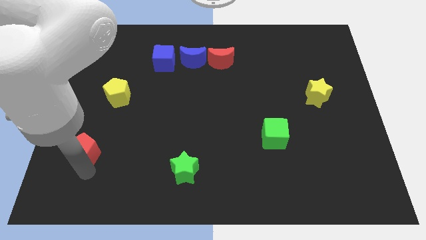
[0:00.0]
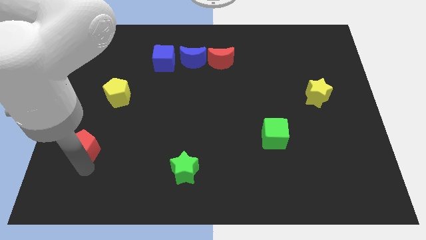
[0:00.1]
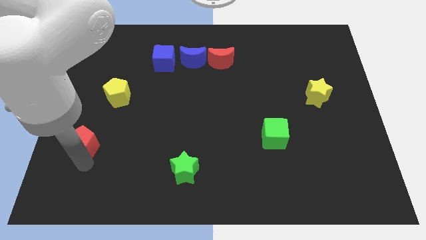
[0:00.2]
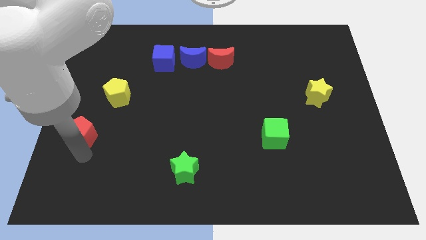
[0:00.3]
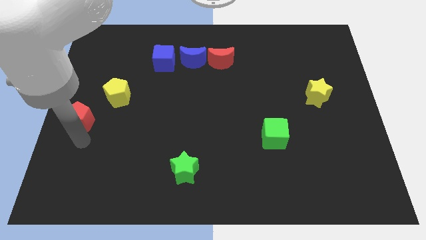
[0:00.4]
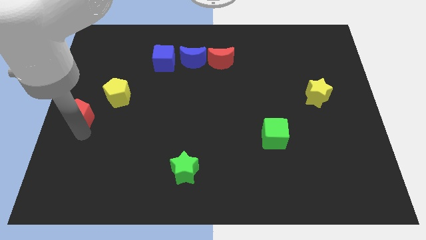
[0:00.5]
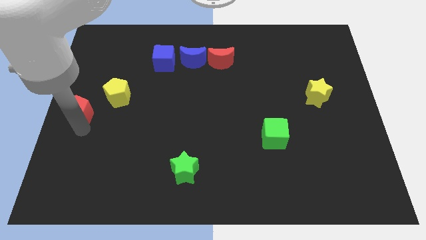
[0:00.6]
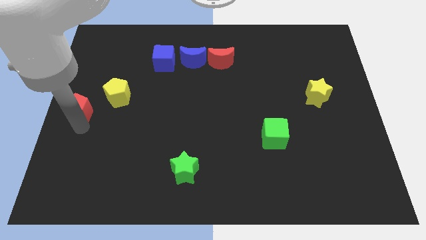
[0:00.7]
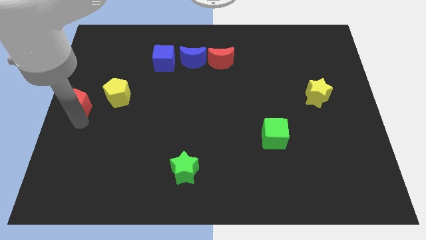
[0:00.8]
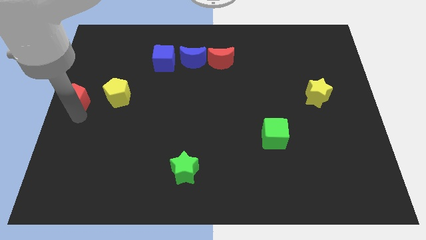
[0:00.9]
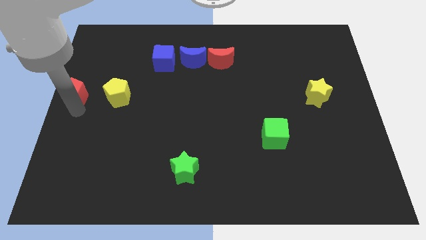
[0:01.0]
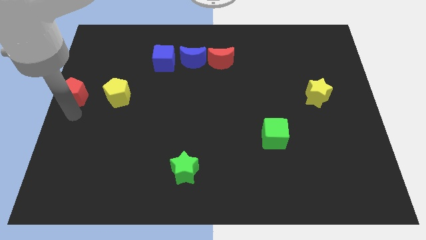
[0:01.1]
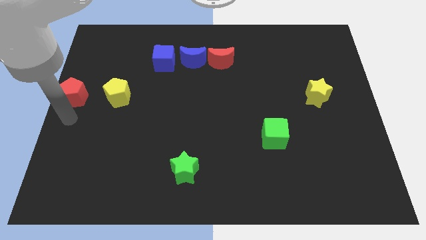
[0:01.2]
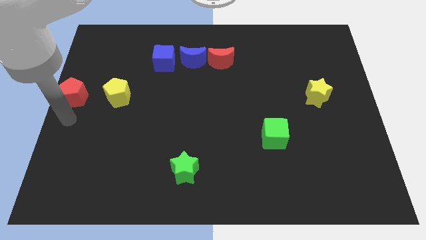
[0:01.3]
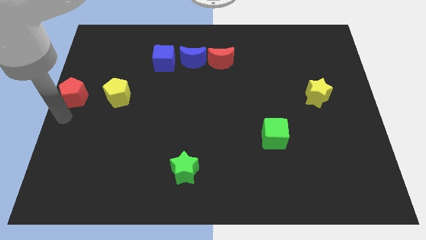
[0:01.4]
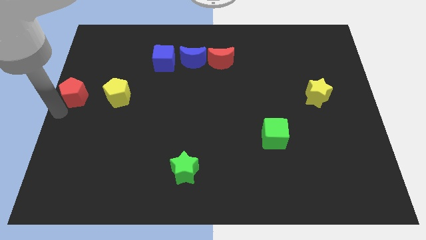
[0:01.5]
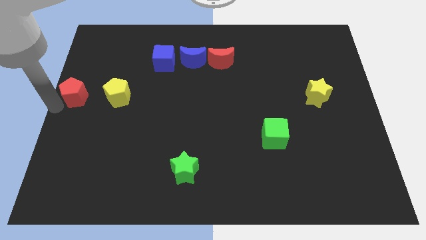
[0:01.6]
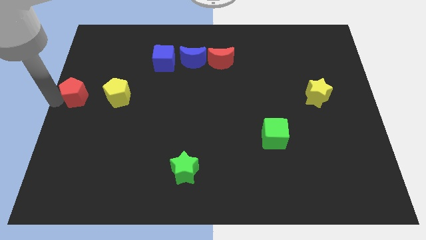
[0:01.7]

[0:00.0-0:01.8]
place the red pentagon to the left of the yellow pentagon

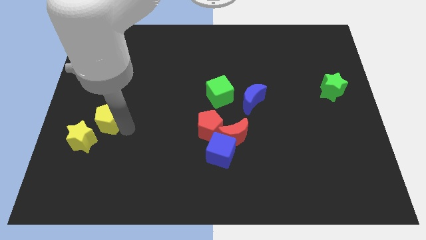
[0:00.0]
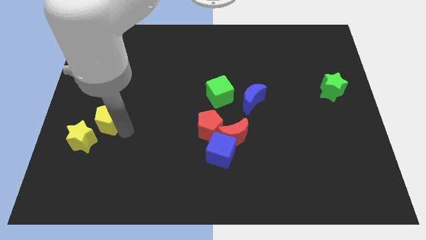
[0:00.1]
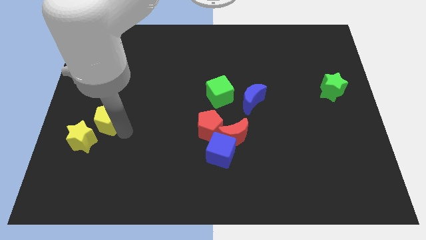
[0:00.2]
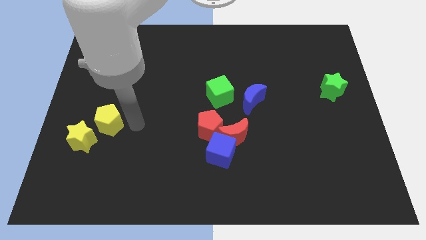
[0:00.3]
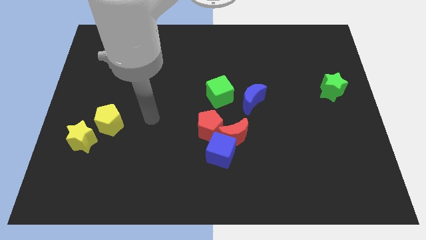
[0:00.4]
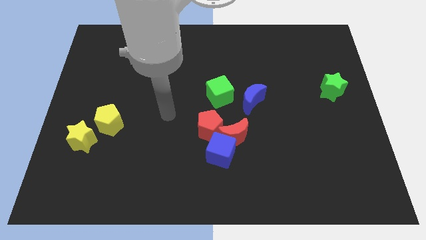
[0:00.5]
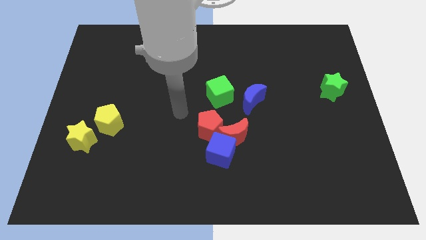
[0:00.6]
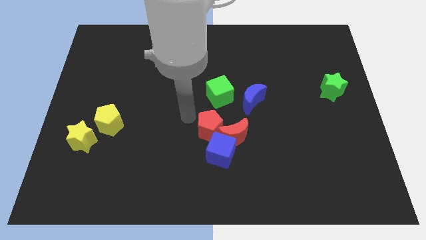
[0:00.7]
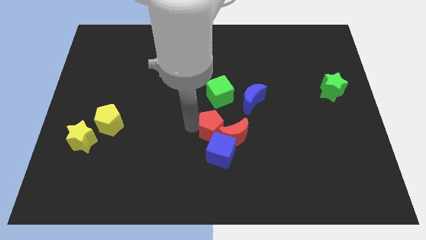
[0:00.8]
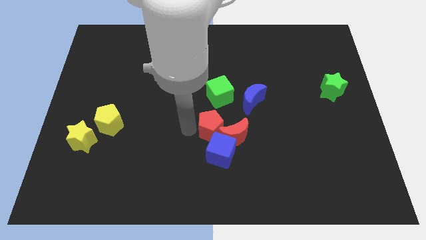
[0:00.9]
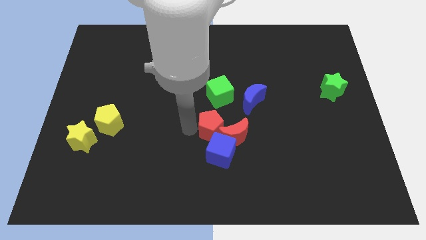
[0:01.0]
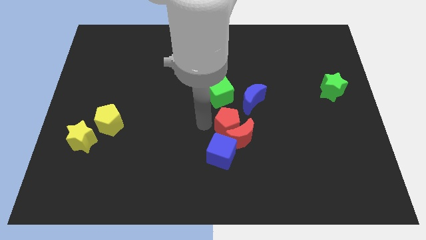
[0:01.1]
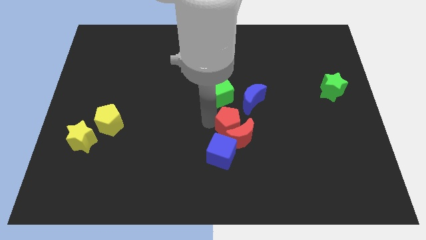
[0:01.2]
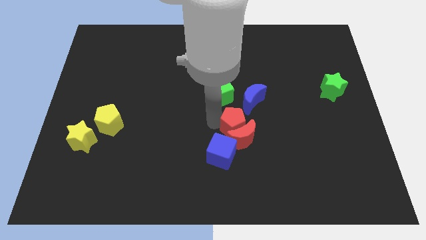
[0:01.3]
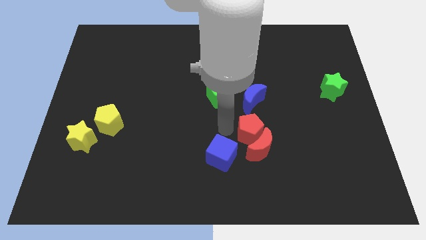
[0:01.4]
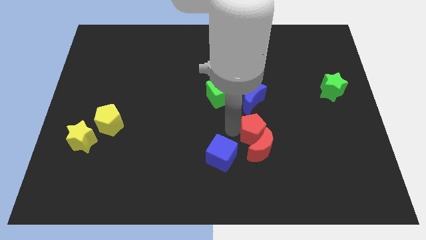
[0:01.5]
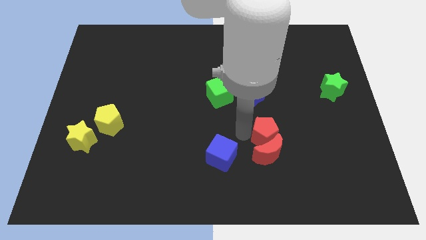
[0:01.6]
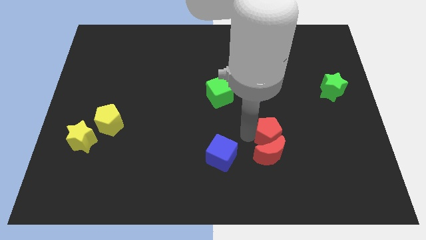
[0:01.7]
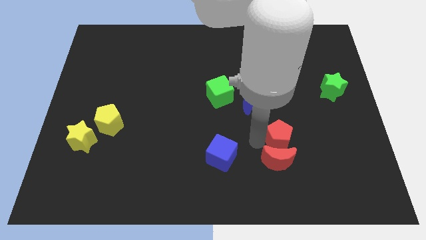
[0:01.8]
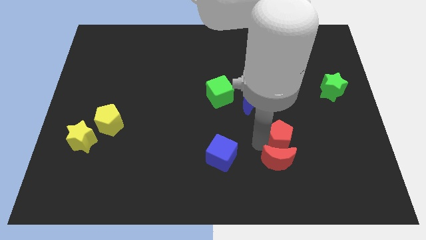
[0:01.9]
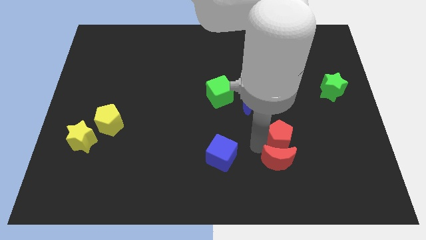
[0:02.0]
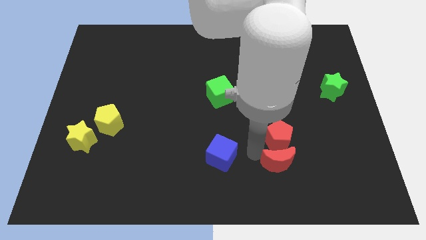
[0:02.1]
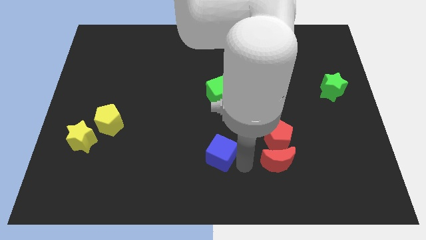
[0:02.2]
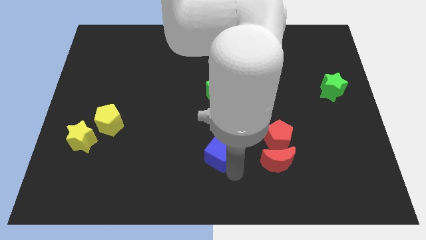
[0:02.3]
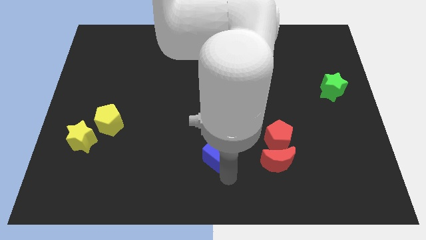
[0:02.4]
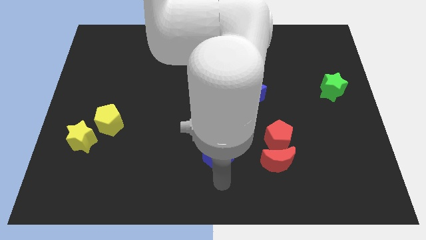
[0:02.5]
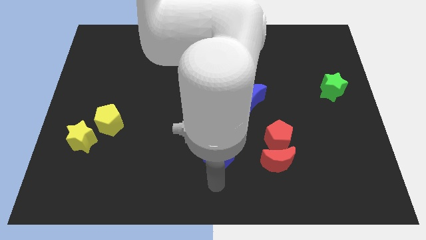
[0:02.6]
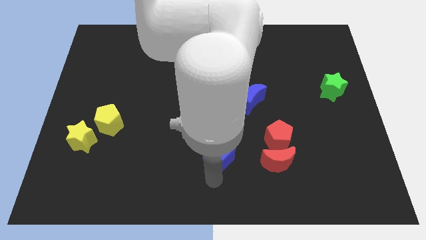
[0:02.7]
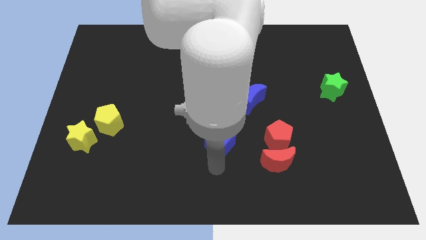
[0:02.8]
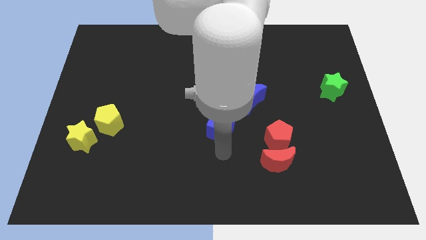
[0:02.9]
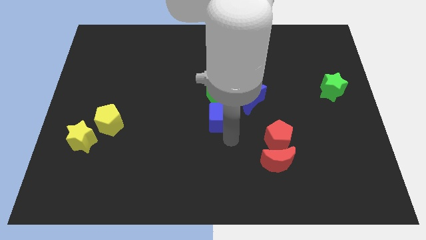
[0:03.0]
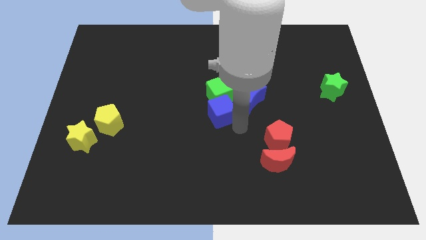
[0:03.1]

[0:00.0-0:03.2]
push blue cube towards green cube

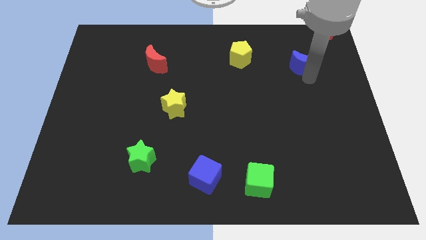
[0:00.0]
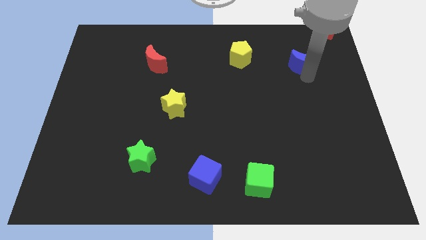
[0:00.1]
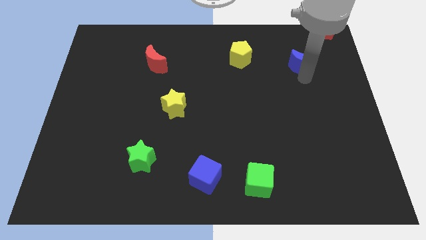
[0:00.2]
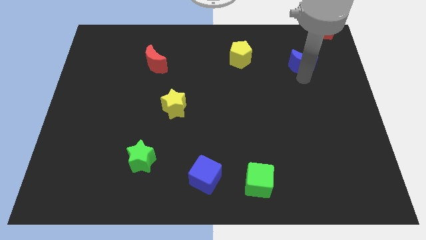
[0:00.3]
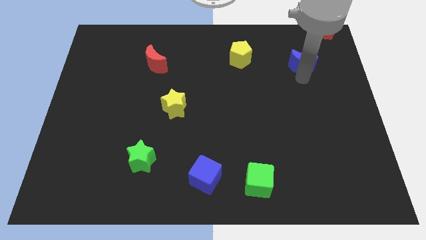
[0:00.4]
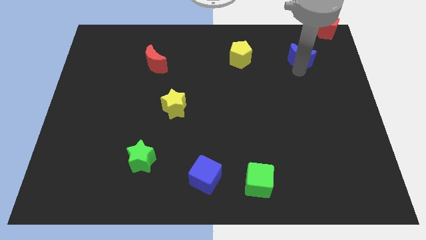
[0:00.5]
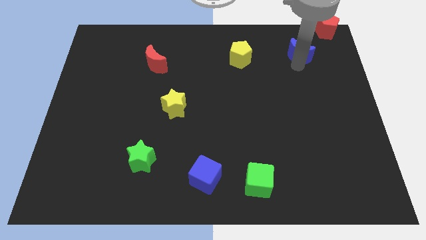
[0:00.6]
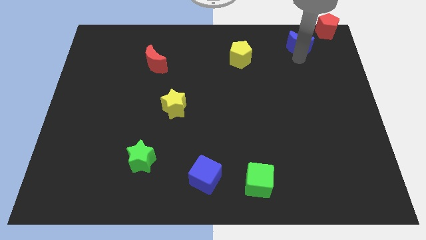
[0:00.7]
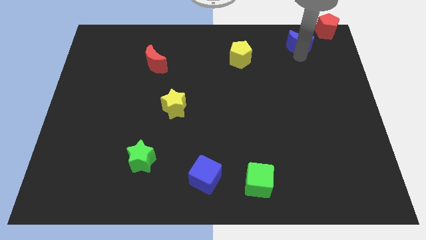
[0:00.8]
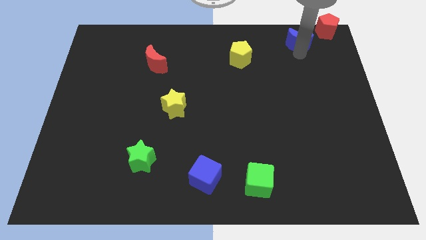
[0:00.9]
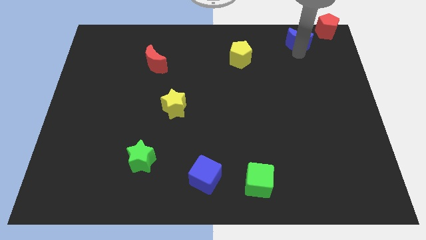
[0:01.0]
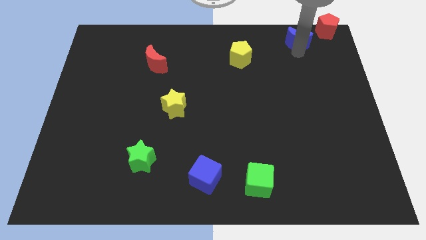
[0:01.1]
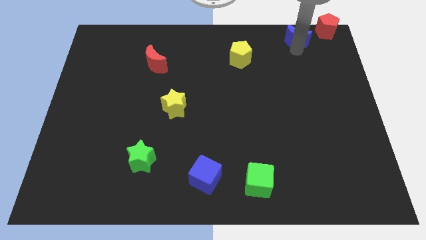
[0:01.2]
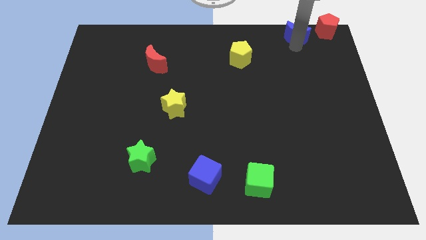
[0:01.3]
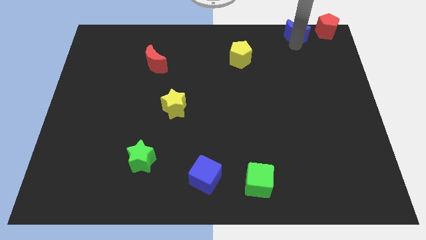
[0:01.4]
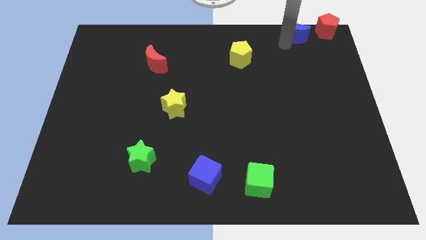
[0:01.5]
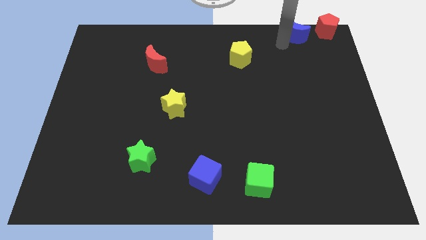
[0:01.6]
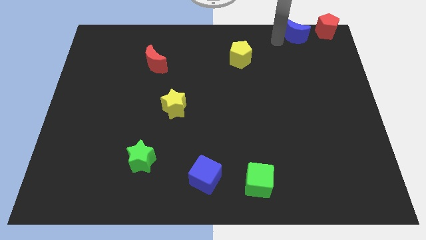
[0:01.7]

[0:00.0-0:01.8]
place blue moon beside red pentagon

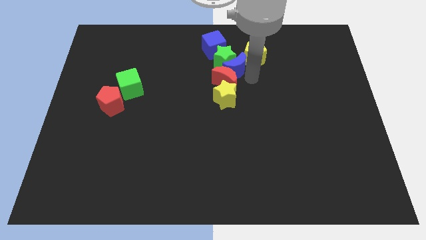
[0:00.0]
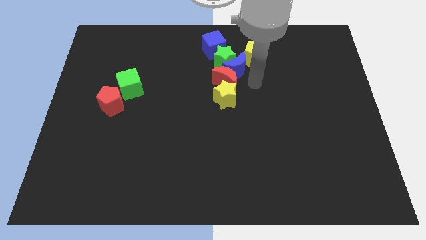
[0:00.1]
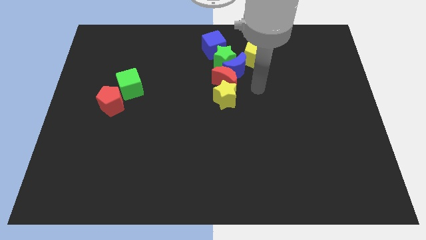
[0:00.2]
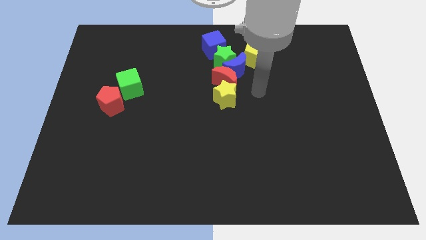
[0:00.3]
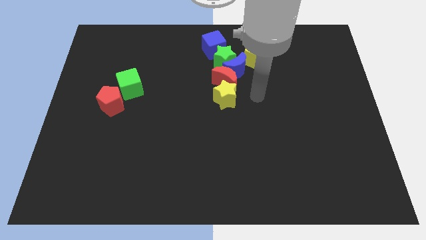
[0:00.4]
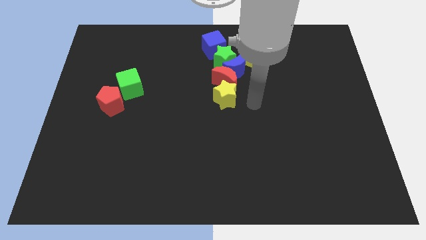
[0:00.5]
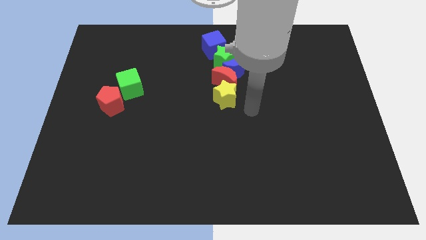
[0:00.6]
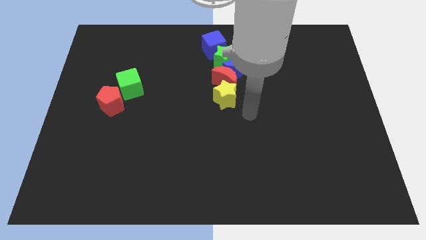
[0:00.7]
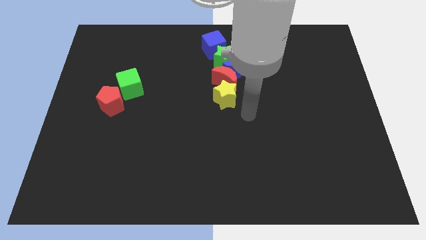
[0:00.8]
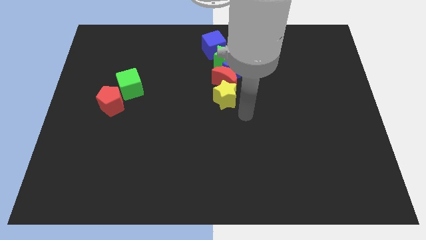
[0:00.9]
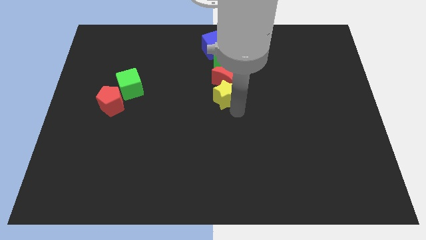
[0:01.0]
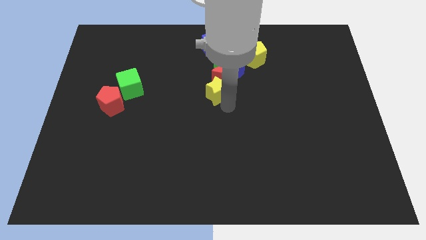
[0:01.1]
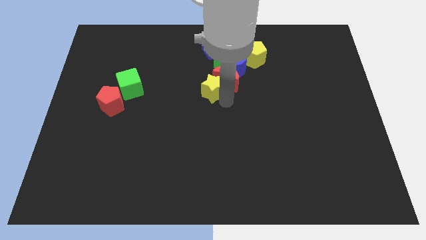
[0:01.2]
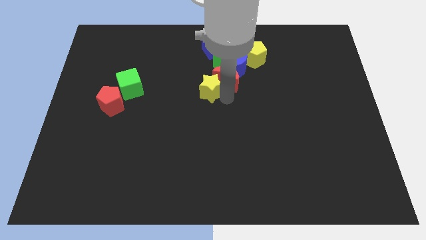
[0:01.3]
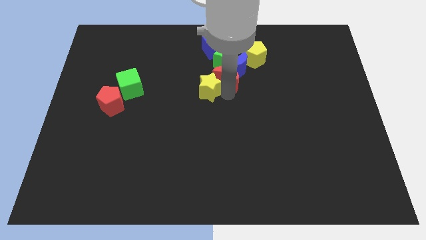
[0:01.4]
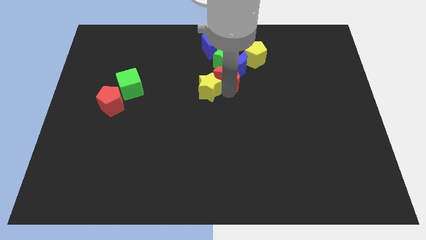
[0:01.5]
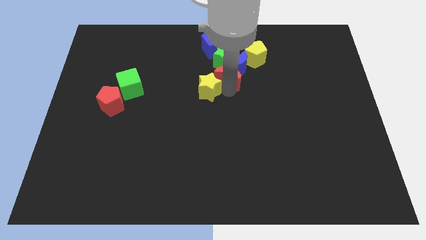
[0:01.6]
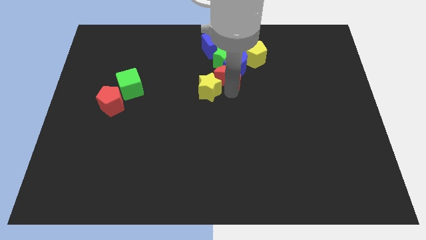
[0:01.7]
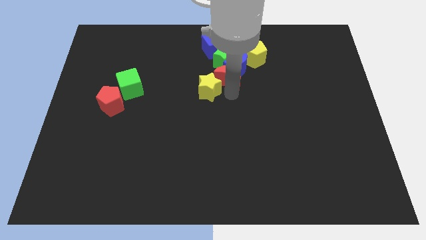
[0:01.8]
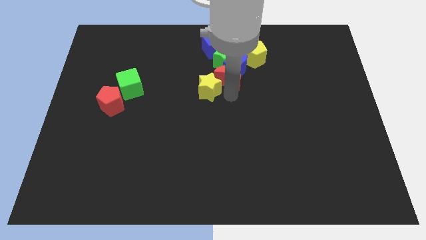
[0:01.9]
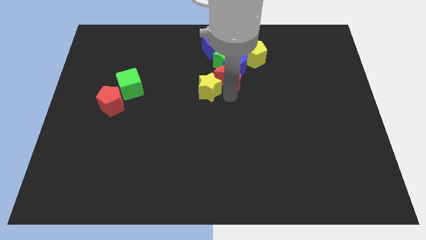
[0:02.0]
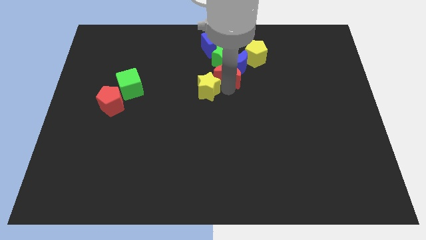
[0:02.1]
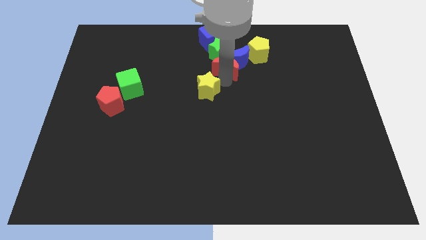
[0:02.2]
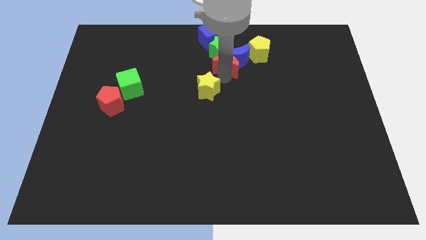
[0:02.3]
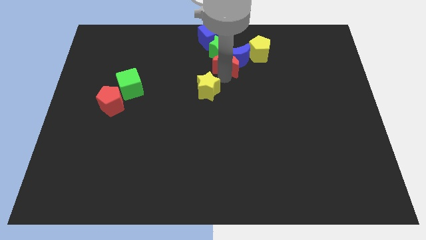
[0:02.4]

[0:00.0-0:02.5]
separate the yellow star from the red moon
